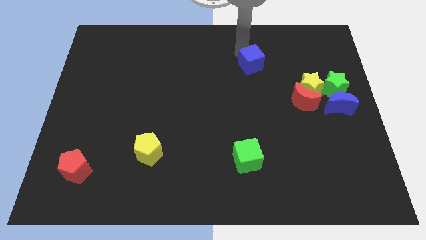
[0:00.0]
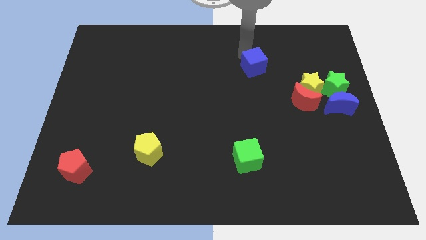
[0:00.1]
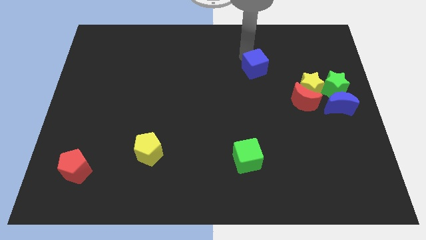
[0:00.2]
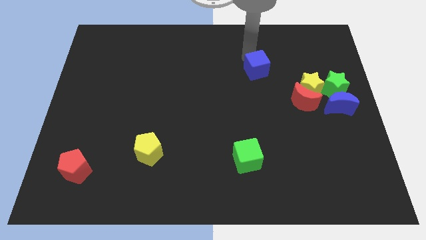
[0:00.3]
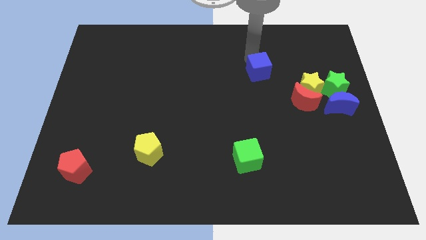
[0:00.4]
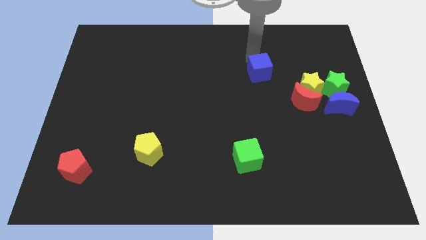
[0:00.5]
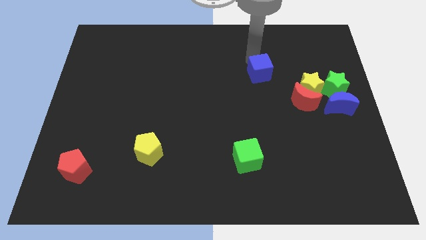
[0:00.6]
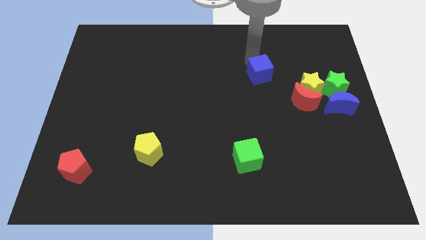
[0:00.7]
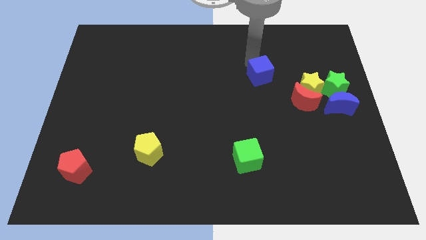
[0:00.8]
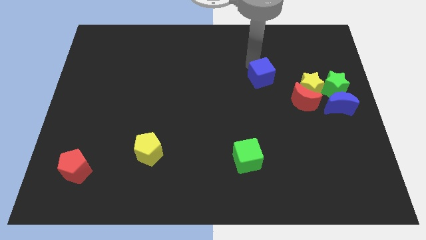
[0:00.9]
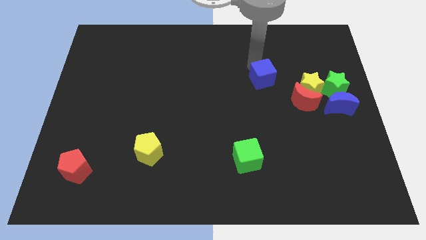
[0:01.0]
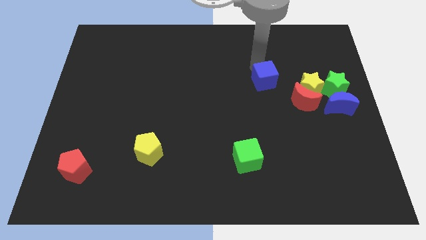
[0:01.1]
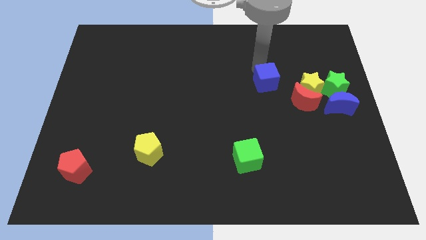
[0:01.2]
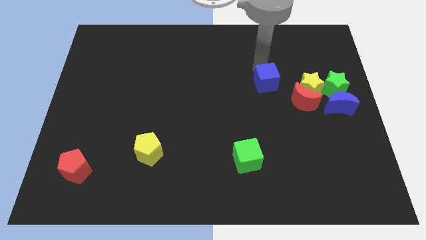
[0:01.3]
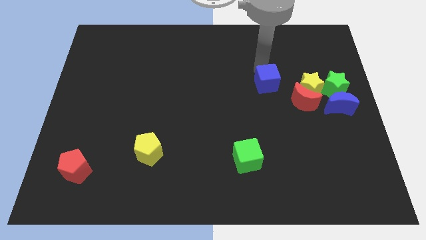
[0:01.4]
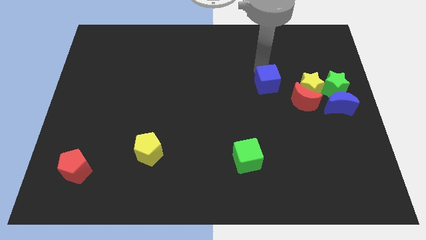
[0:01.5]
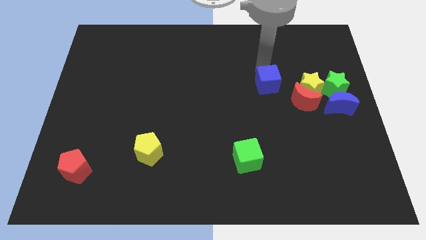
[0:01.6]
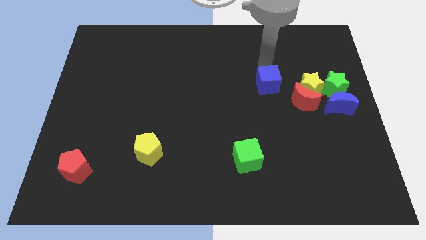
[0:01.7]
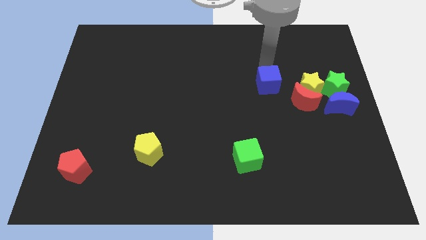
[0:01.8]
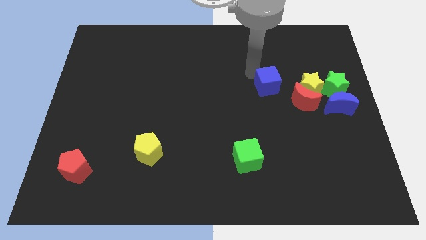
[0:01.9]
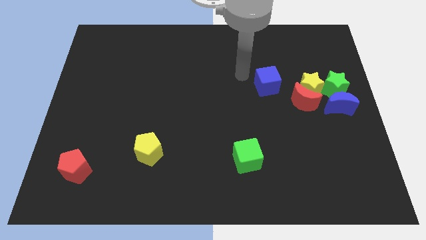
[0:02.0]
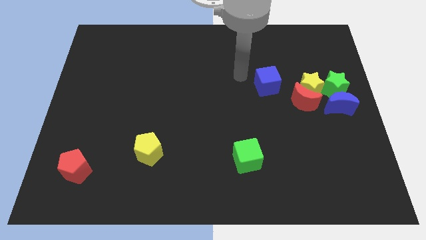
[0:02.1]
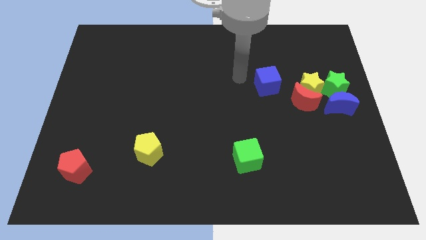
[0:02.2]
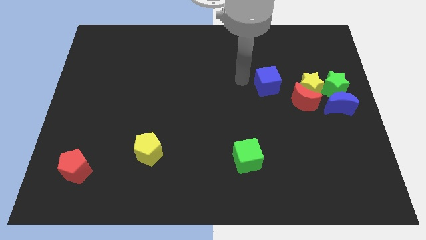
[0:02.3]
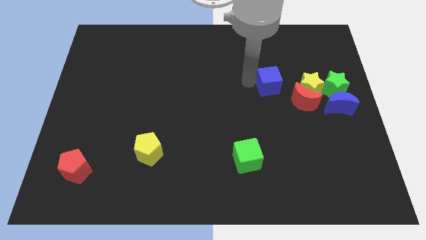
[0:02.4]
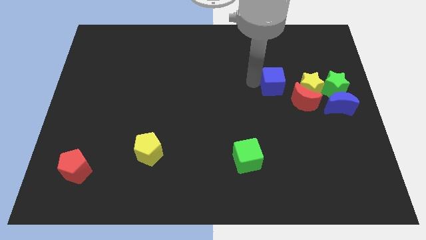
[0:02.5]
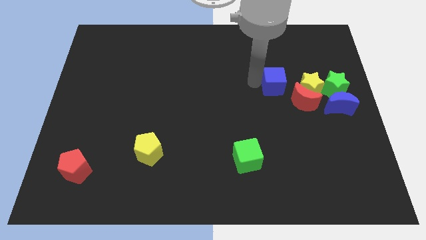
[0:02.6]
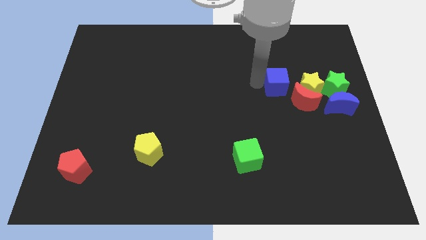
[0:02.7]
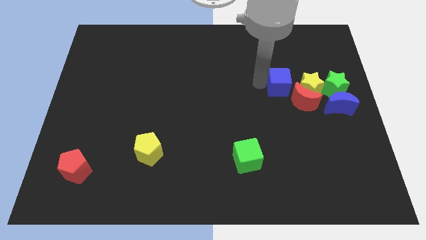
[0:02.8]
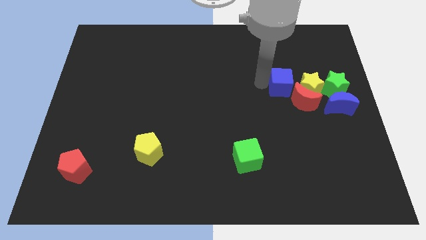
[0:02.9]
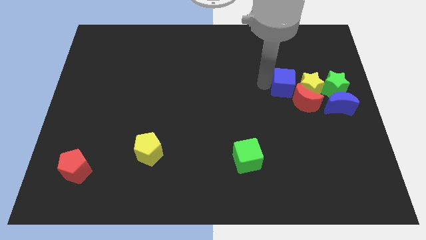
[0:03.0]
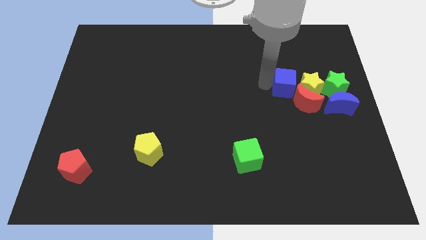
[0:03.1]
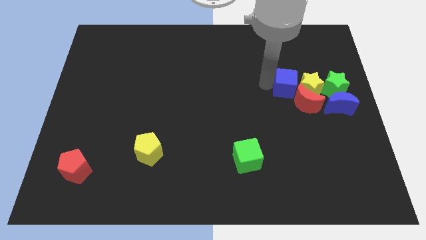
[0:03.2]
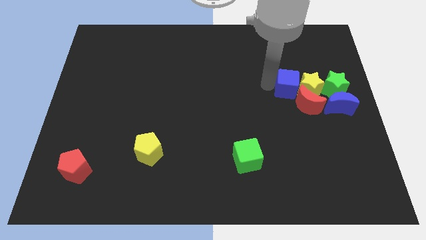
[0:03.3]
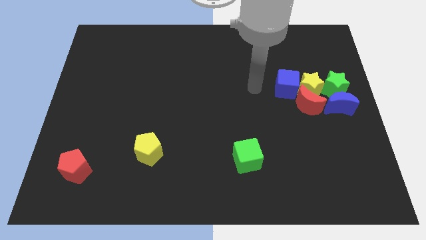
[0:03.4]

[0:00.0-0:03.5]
slide the blue cube into the group of blocks

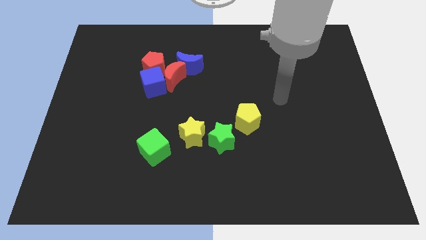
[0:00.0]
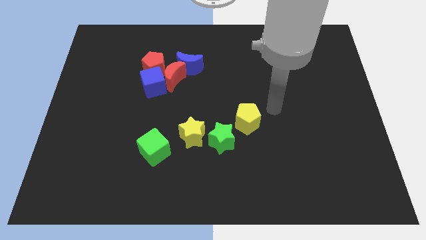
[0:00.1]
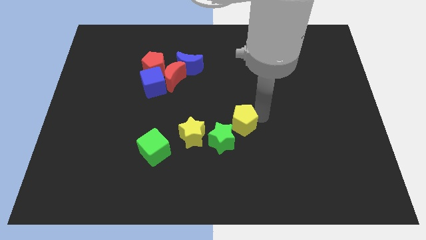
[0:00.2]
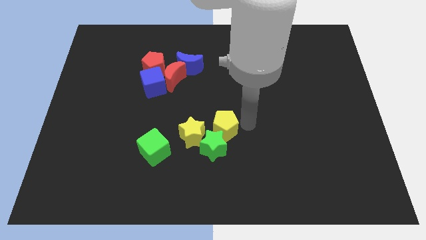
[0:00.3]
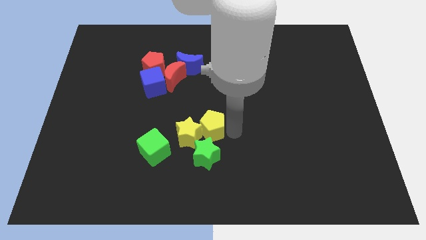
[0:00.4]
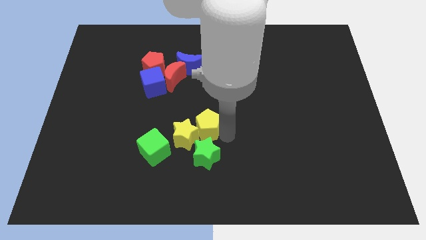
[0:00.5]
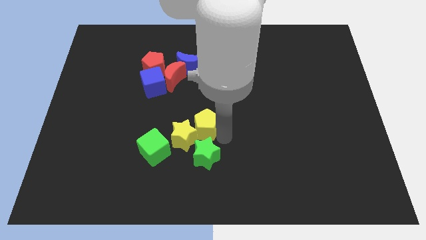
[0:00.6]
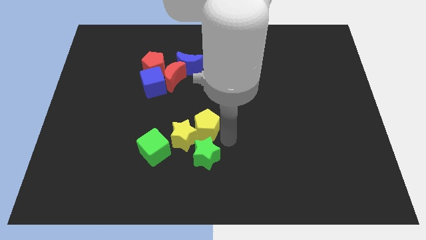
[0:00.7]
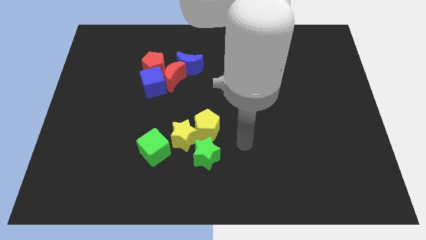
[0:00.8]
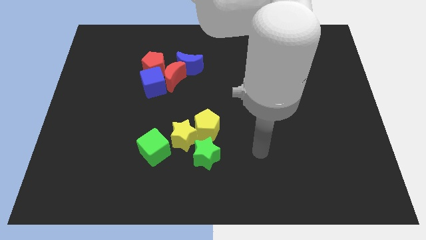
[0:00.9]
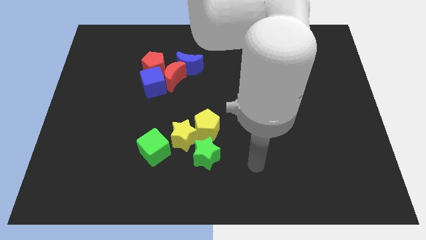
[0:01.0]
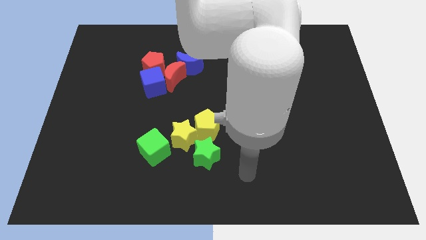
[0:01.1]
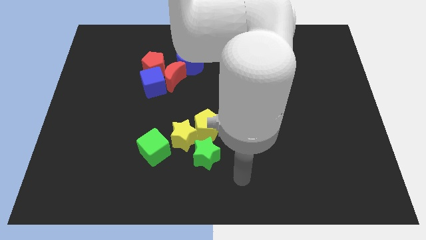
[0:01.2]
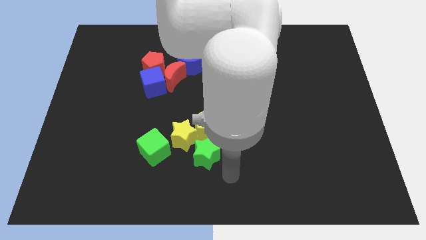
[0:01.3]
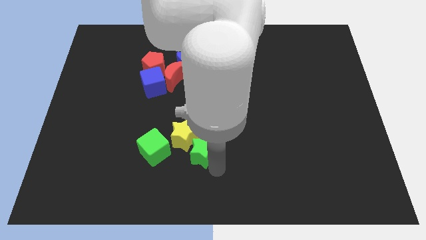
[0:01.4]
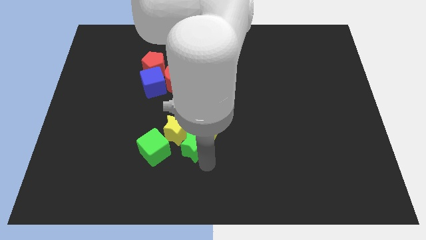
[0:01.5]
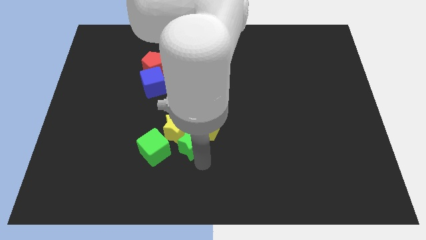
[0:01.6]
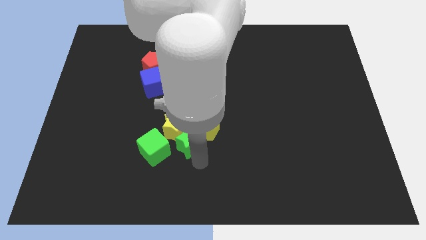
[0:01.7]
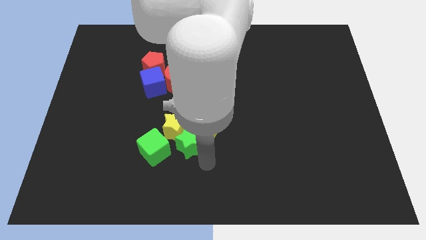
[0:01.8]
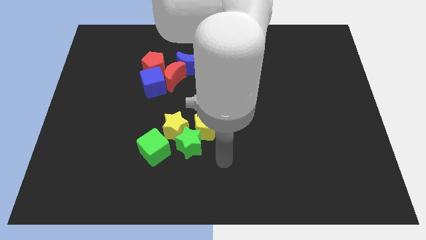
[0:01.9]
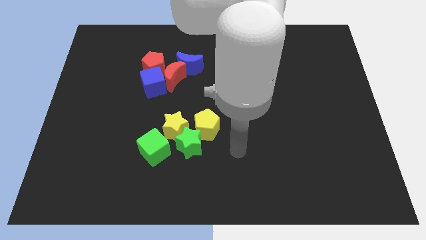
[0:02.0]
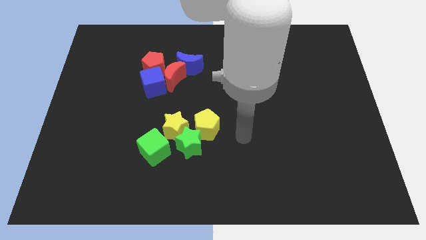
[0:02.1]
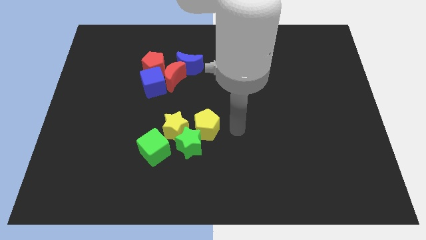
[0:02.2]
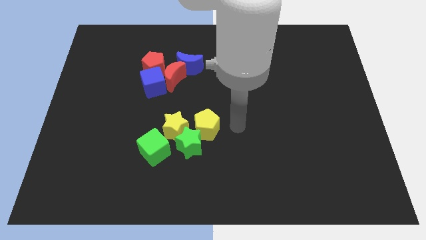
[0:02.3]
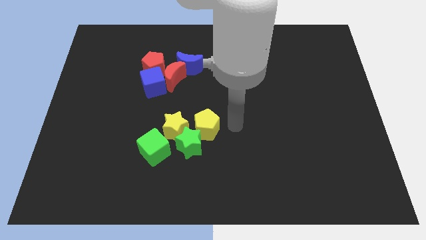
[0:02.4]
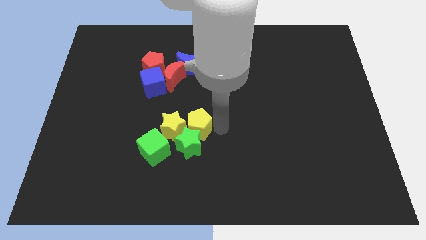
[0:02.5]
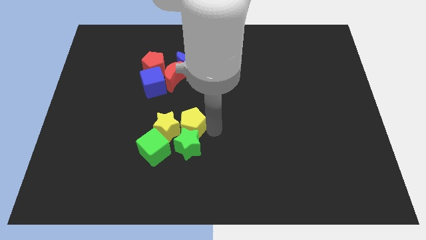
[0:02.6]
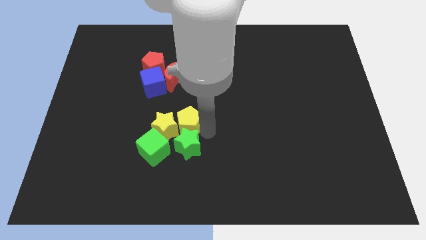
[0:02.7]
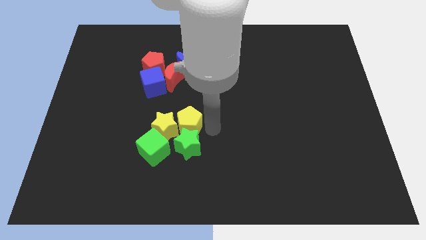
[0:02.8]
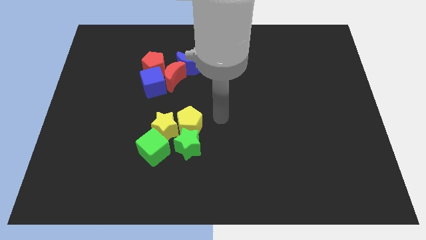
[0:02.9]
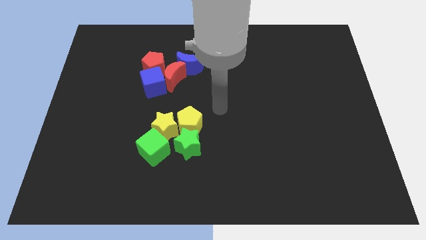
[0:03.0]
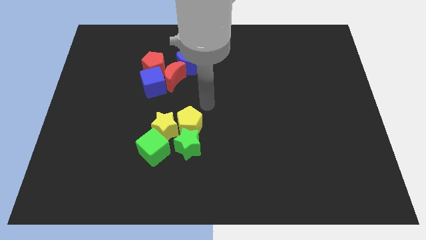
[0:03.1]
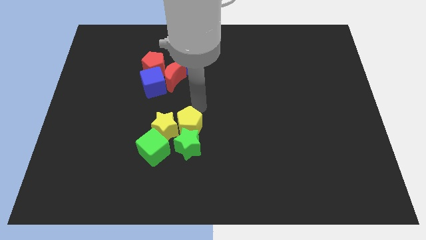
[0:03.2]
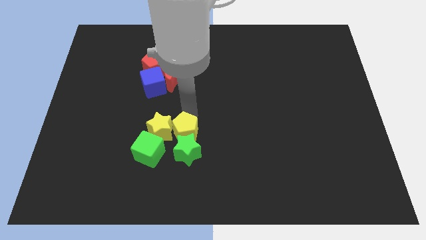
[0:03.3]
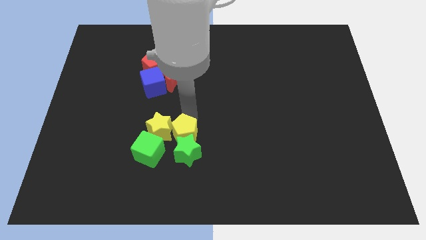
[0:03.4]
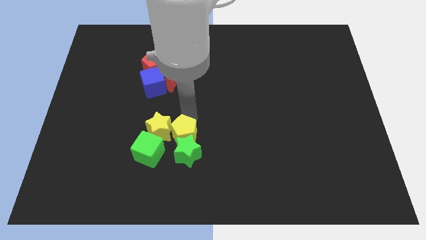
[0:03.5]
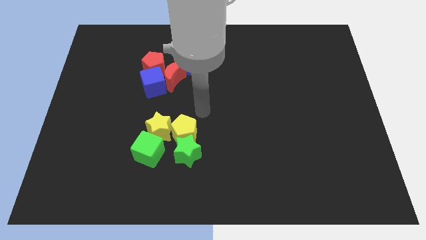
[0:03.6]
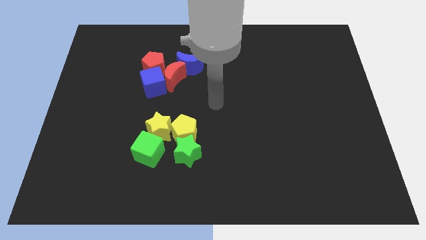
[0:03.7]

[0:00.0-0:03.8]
push the yellow star and green star with the yellow pentagon

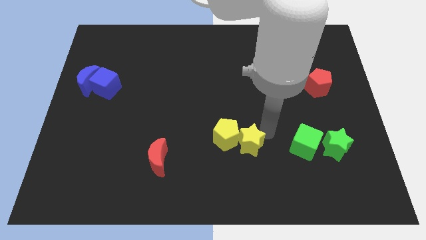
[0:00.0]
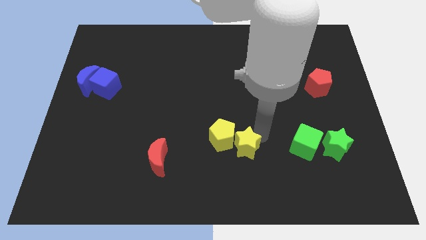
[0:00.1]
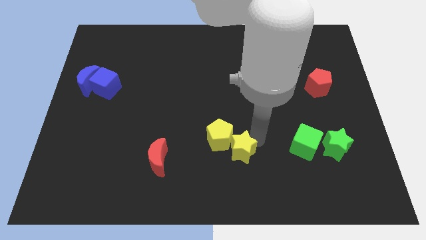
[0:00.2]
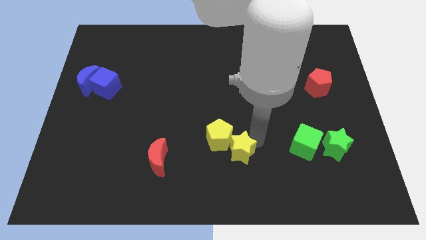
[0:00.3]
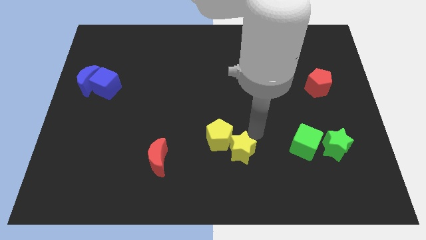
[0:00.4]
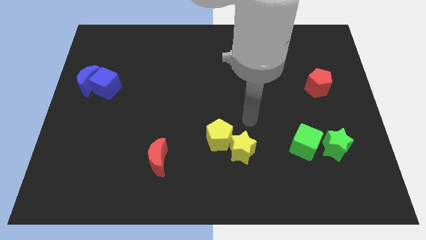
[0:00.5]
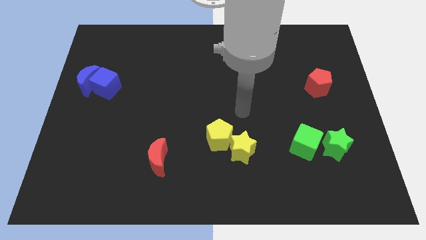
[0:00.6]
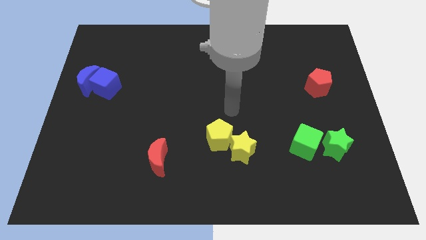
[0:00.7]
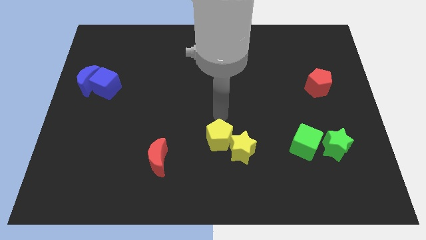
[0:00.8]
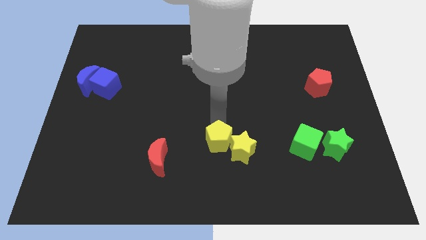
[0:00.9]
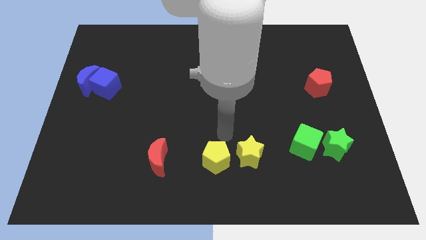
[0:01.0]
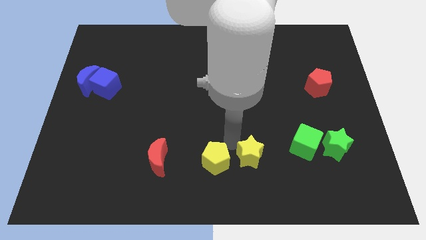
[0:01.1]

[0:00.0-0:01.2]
place the yellow blocks parallel to red moon

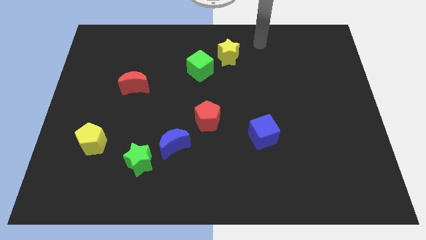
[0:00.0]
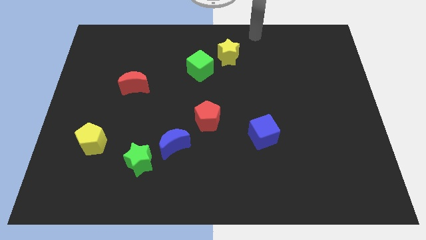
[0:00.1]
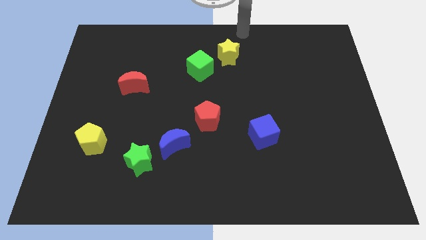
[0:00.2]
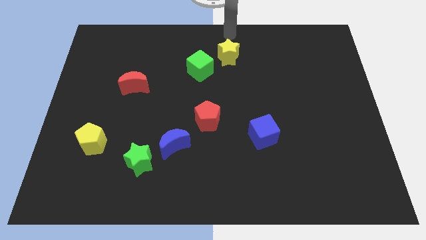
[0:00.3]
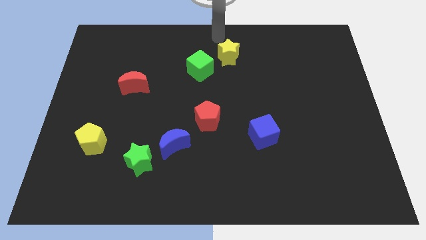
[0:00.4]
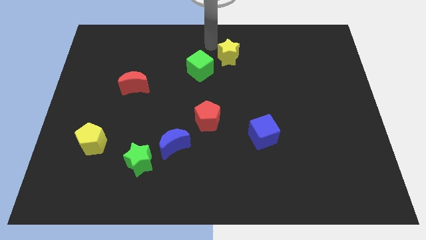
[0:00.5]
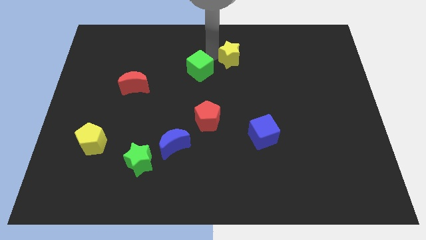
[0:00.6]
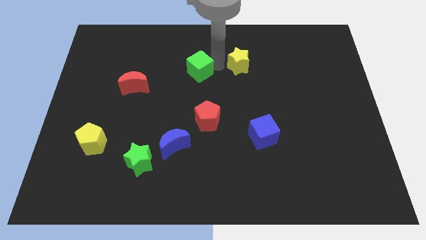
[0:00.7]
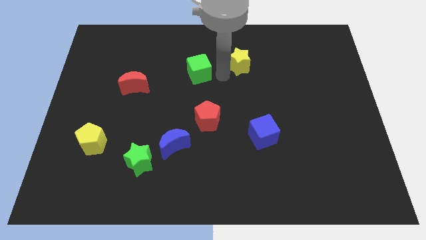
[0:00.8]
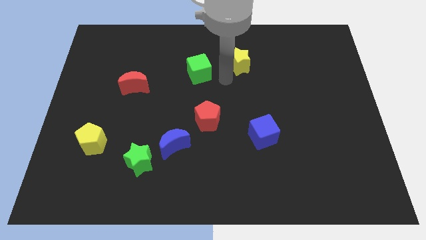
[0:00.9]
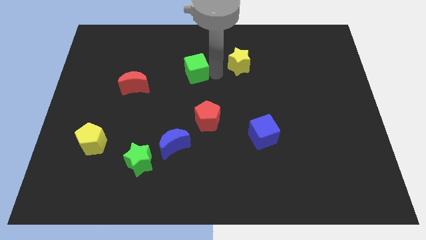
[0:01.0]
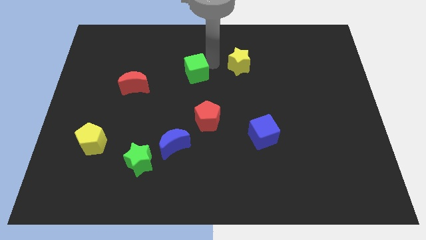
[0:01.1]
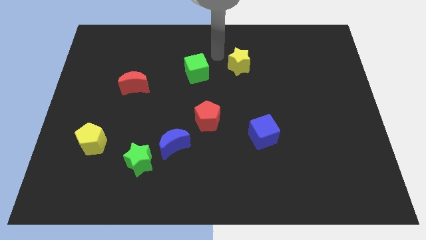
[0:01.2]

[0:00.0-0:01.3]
move yellow star and green cube
